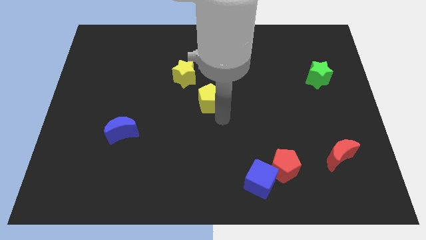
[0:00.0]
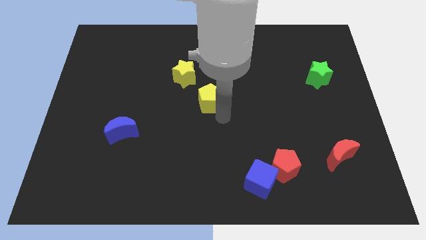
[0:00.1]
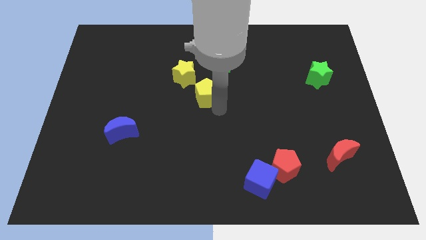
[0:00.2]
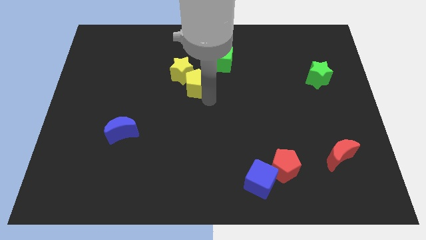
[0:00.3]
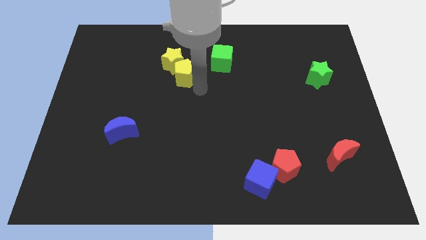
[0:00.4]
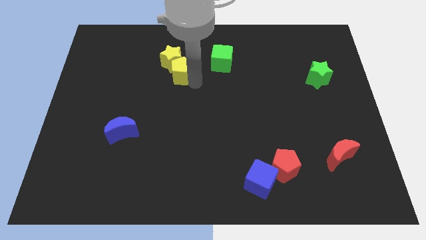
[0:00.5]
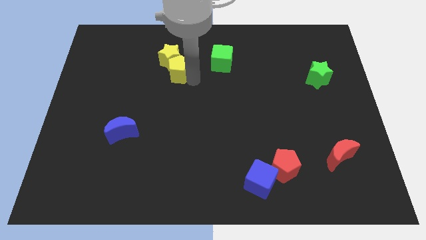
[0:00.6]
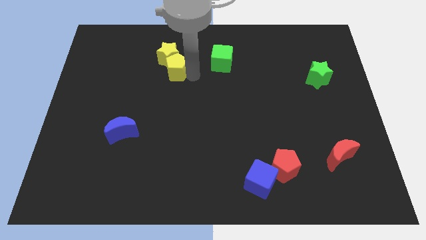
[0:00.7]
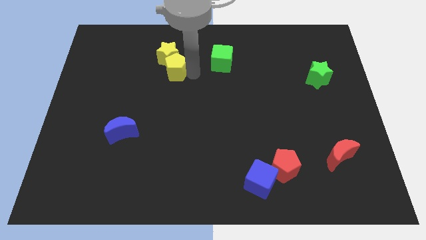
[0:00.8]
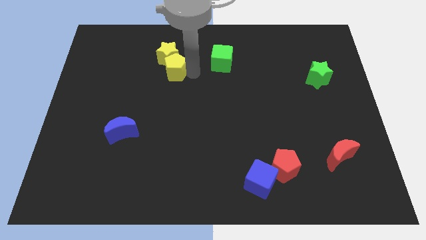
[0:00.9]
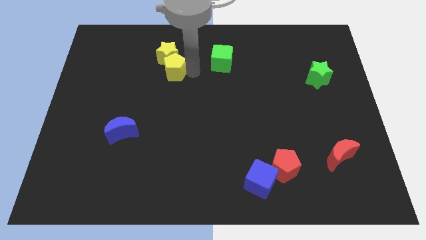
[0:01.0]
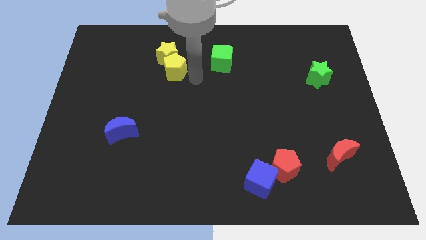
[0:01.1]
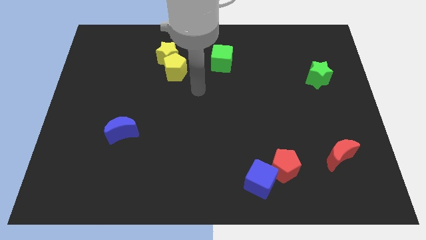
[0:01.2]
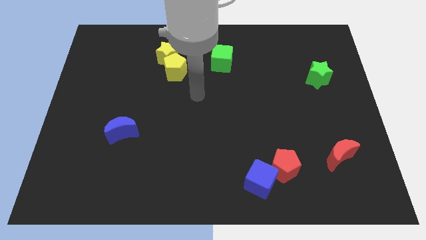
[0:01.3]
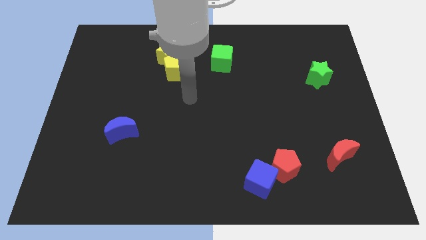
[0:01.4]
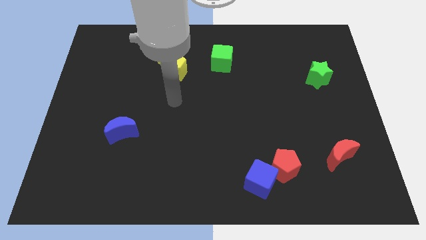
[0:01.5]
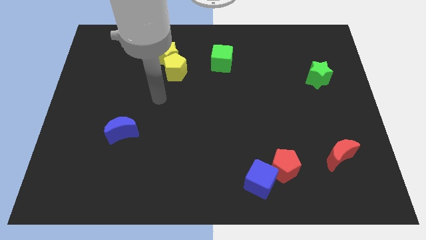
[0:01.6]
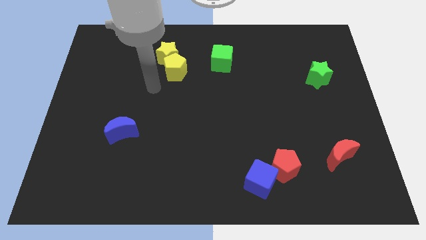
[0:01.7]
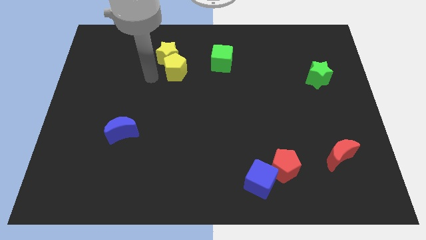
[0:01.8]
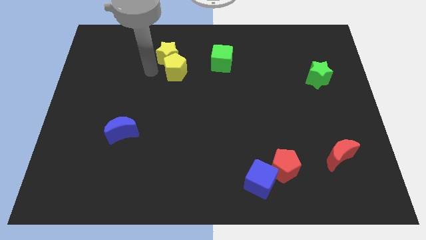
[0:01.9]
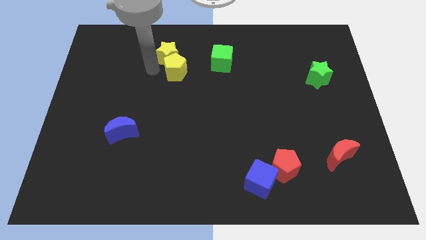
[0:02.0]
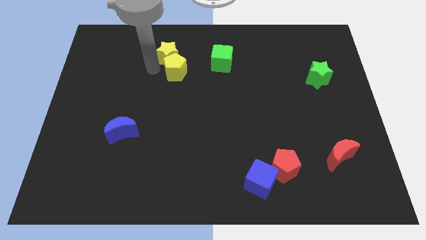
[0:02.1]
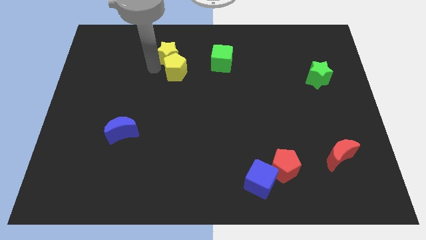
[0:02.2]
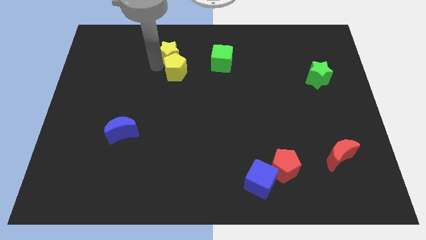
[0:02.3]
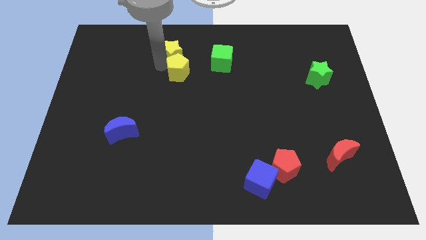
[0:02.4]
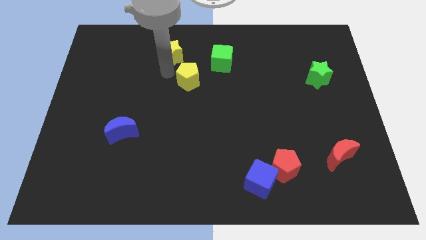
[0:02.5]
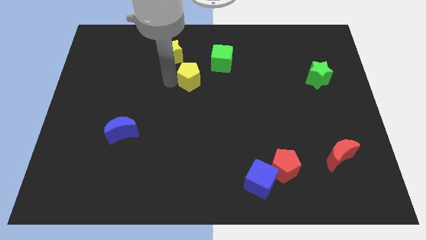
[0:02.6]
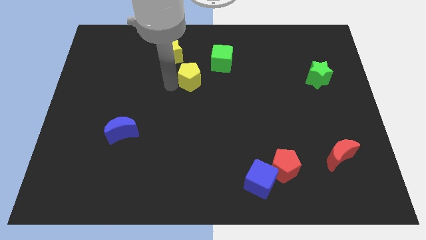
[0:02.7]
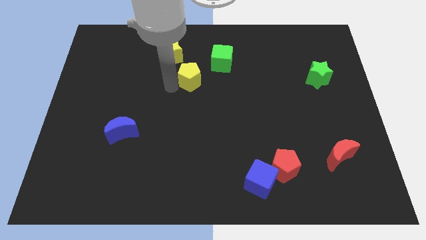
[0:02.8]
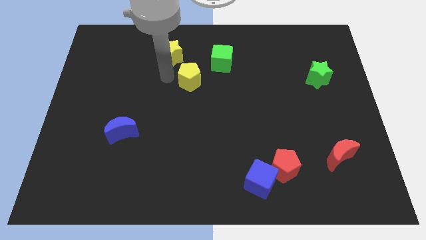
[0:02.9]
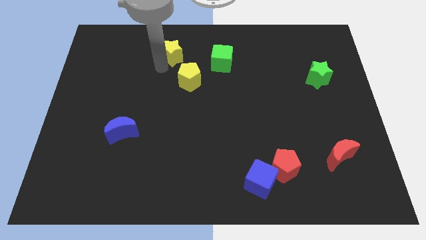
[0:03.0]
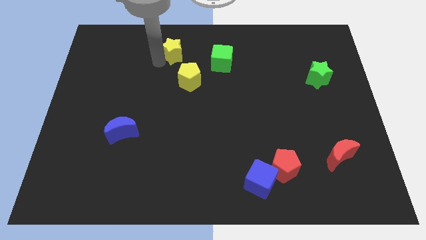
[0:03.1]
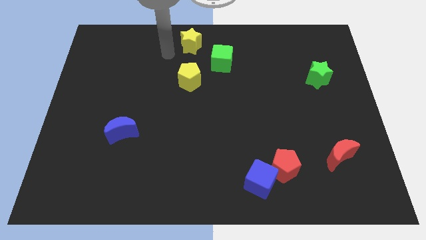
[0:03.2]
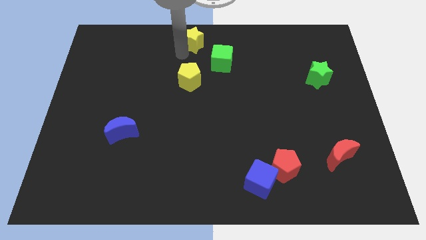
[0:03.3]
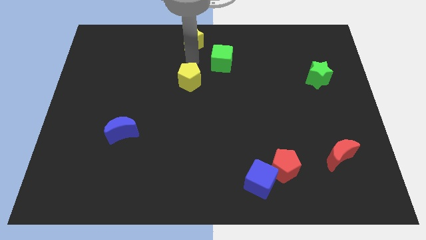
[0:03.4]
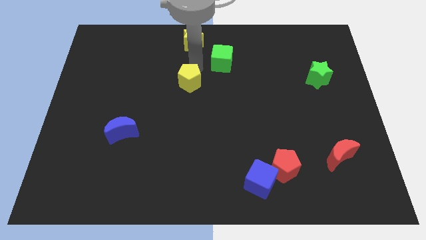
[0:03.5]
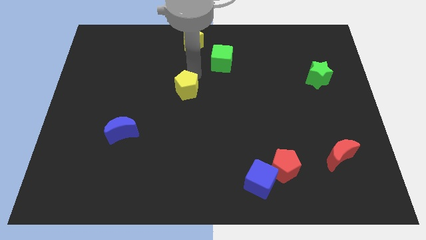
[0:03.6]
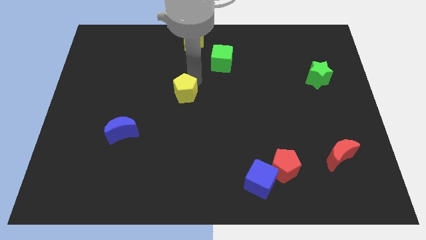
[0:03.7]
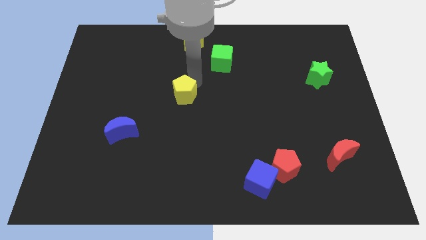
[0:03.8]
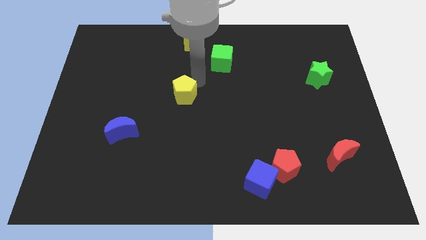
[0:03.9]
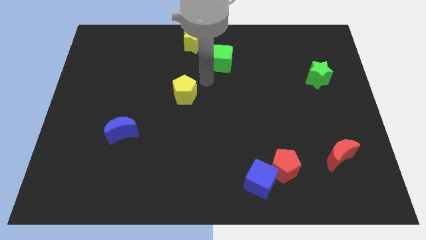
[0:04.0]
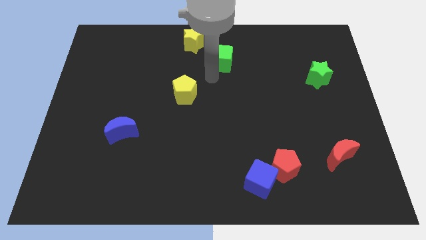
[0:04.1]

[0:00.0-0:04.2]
separate the yellow star and yellow pentgaon

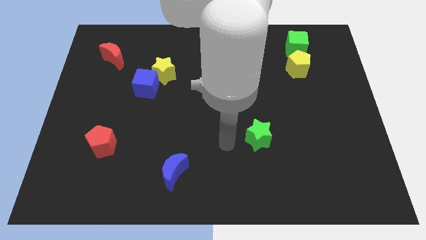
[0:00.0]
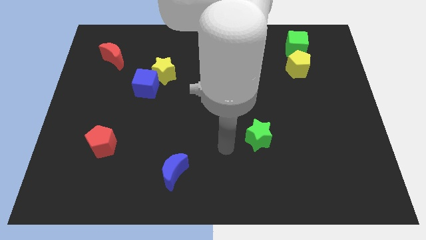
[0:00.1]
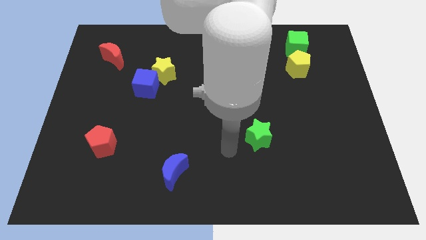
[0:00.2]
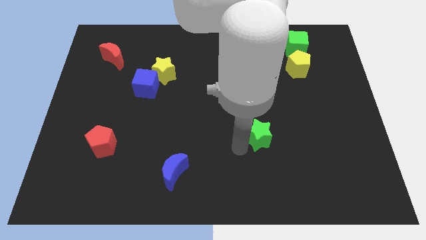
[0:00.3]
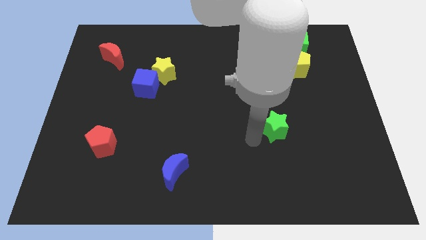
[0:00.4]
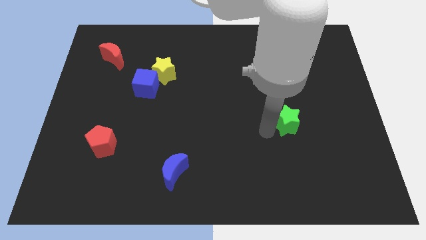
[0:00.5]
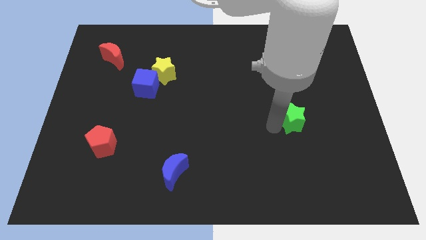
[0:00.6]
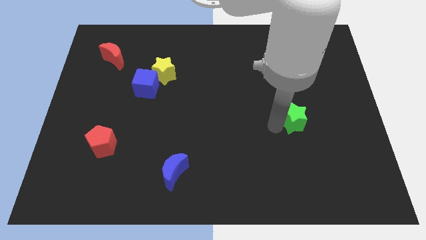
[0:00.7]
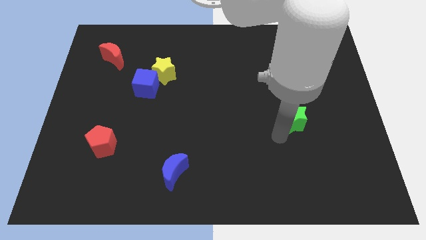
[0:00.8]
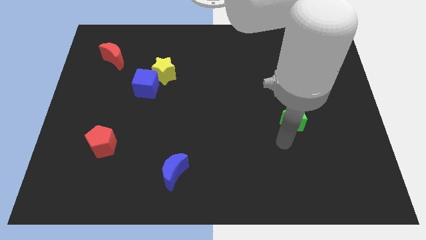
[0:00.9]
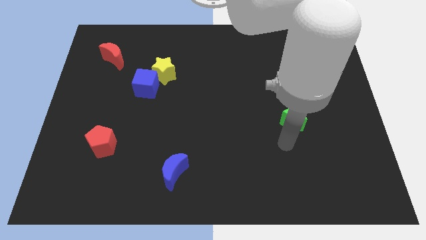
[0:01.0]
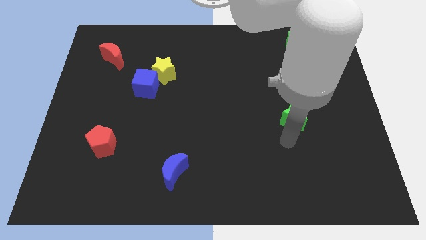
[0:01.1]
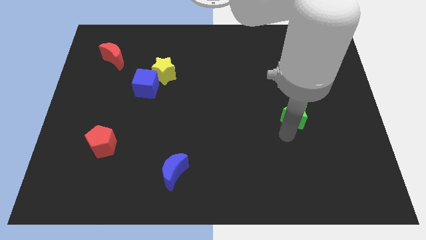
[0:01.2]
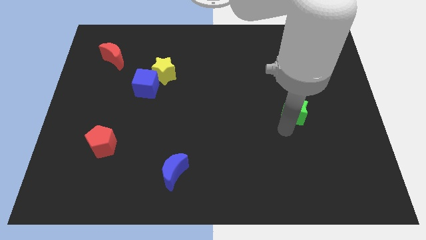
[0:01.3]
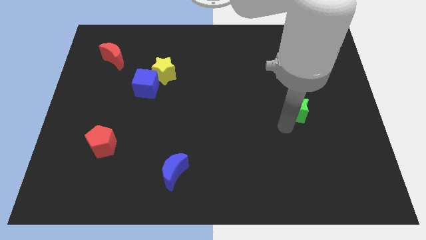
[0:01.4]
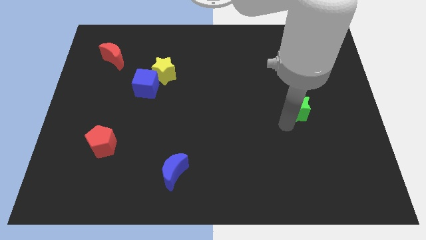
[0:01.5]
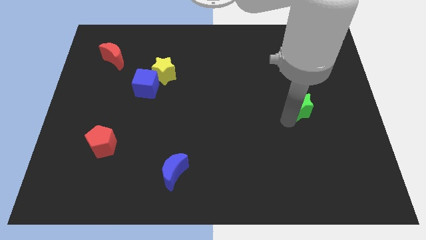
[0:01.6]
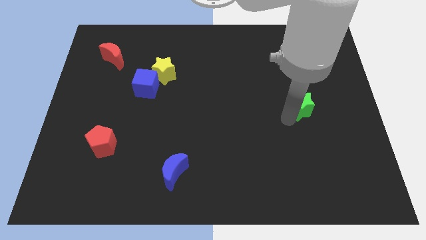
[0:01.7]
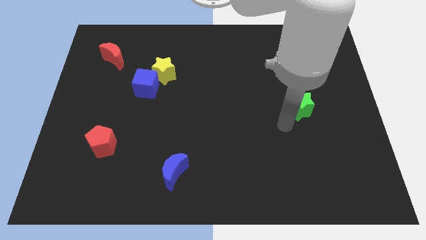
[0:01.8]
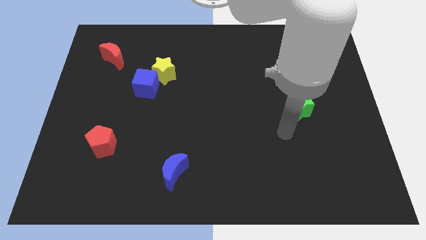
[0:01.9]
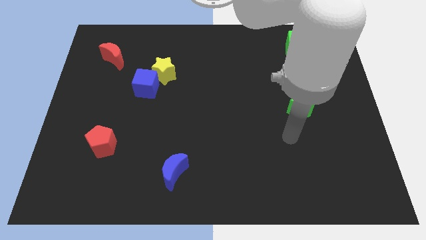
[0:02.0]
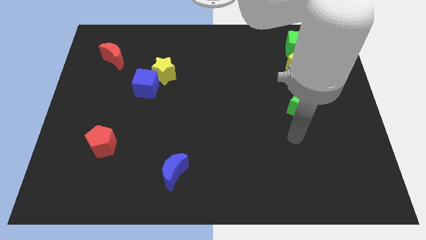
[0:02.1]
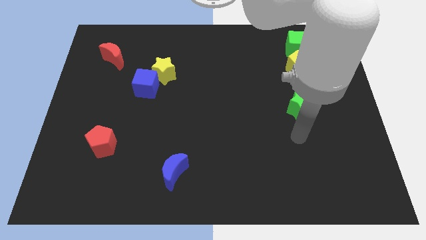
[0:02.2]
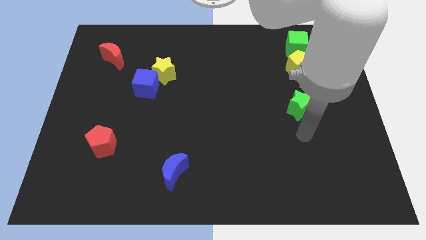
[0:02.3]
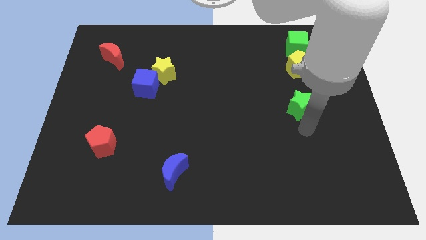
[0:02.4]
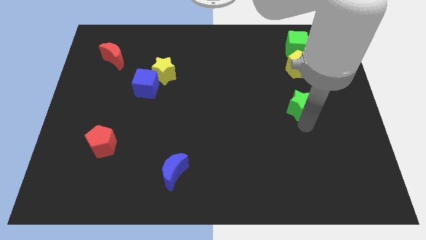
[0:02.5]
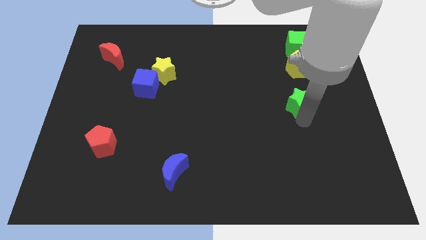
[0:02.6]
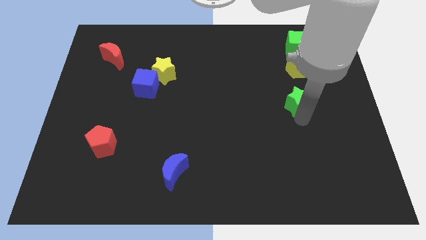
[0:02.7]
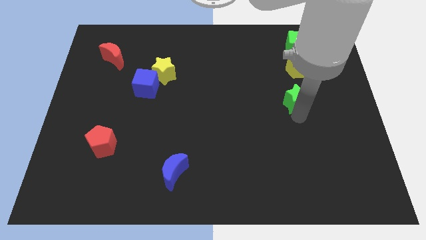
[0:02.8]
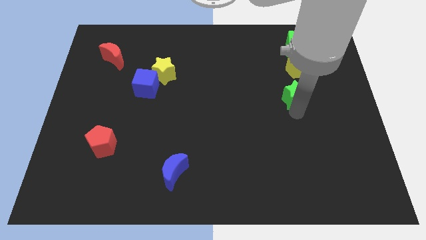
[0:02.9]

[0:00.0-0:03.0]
move the green star towards the yellow pentagon

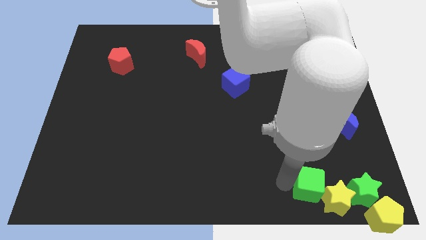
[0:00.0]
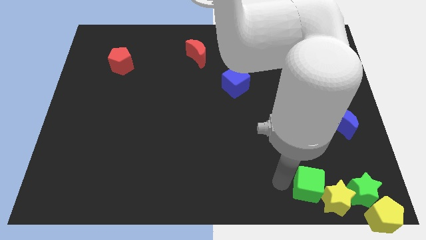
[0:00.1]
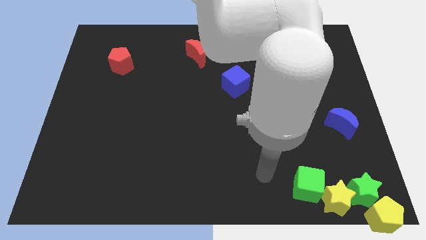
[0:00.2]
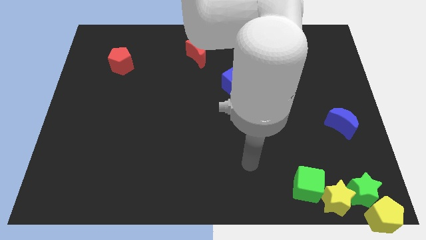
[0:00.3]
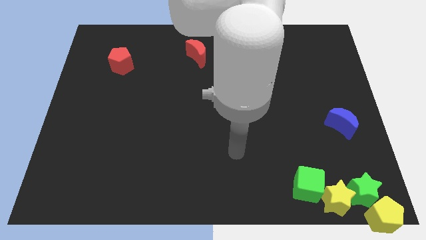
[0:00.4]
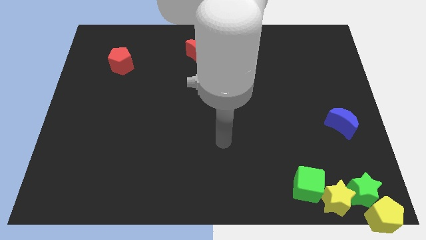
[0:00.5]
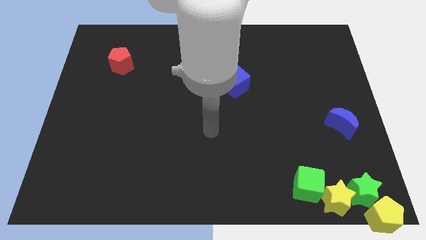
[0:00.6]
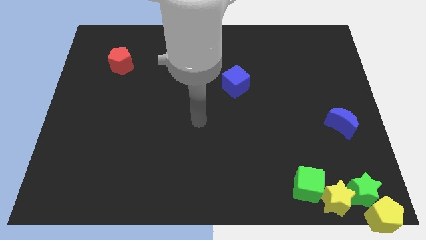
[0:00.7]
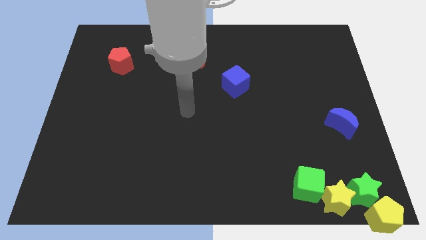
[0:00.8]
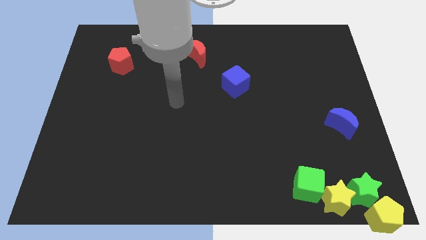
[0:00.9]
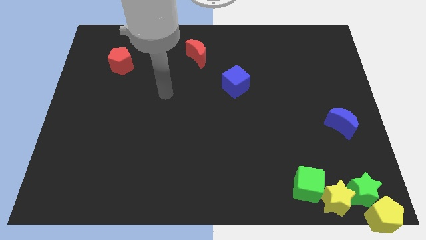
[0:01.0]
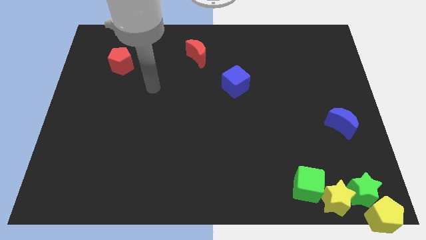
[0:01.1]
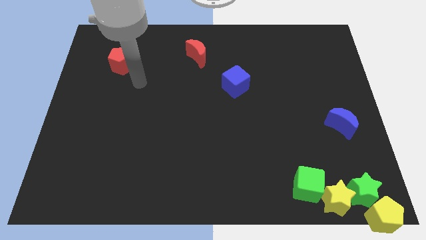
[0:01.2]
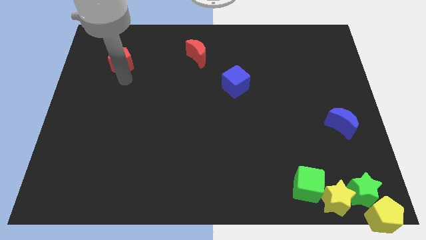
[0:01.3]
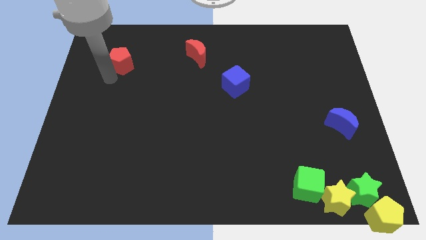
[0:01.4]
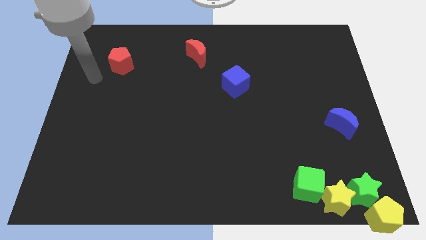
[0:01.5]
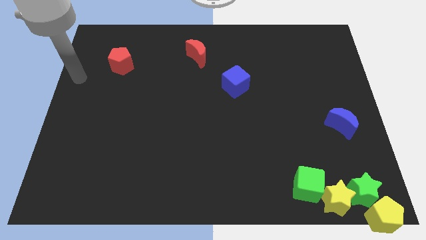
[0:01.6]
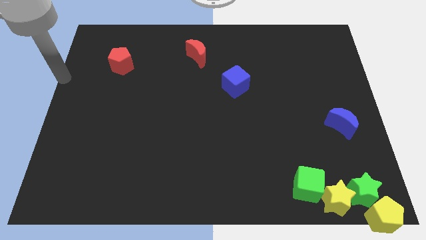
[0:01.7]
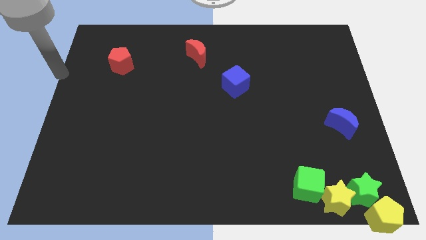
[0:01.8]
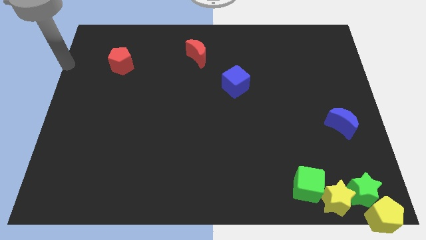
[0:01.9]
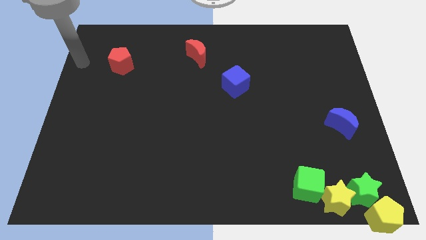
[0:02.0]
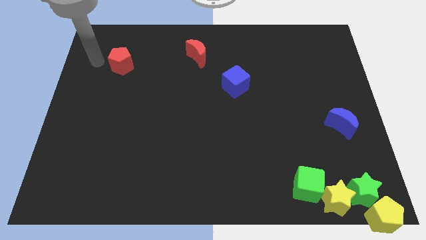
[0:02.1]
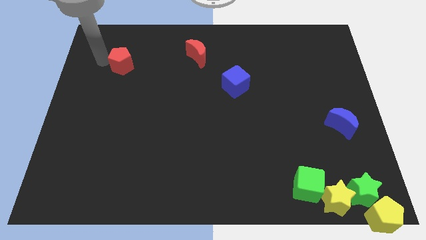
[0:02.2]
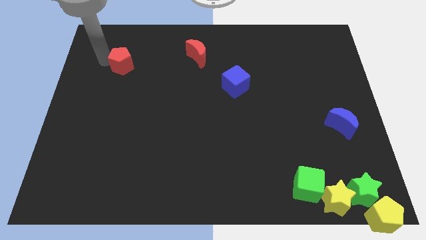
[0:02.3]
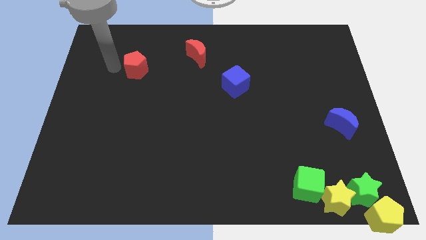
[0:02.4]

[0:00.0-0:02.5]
place your arm to the left of red pentagon
